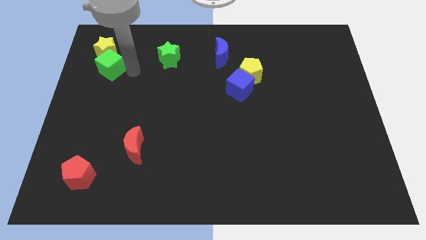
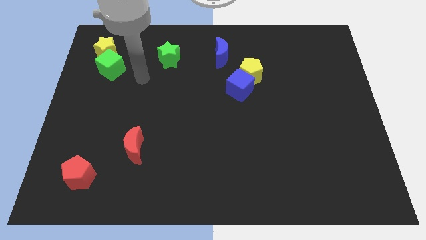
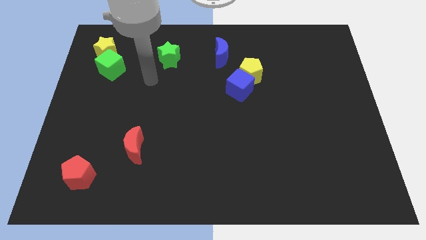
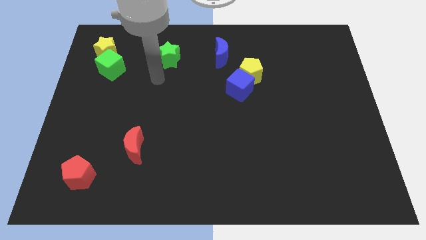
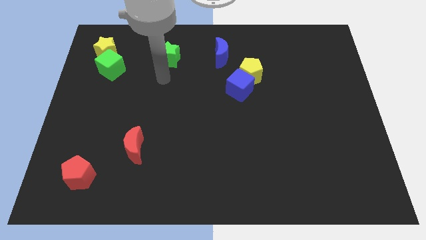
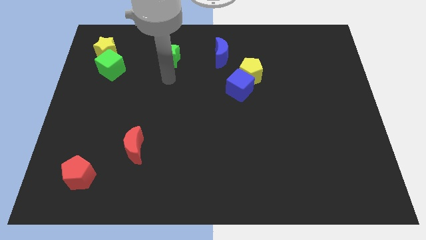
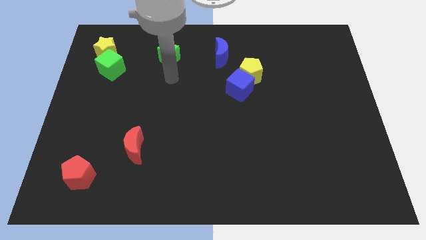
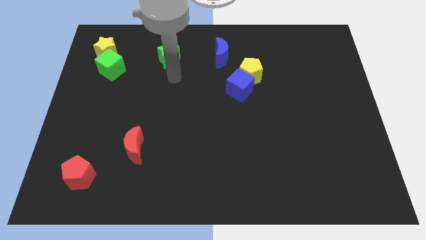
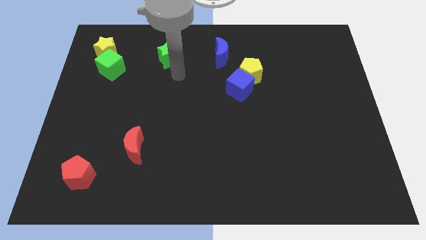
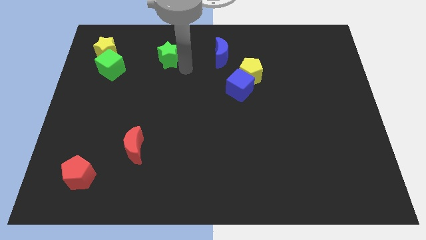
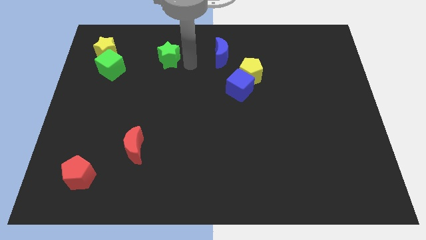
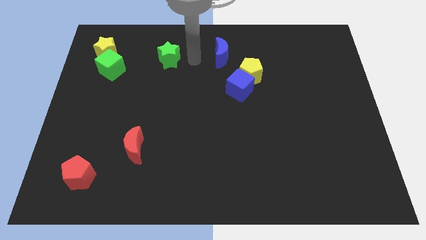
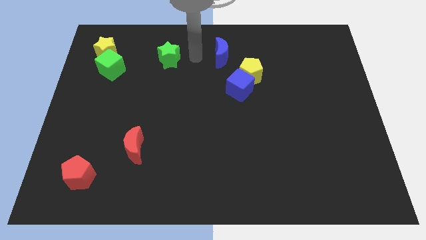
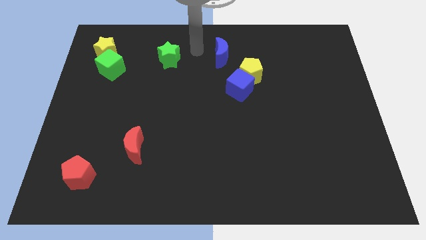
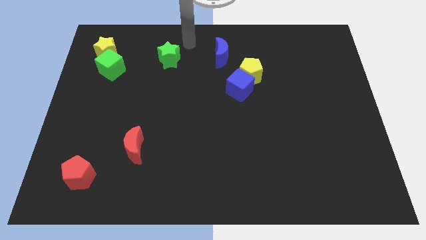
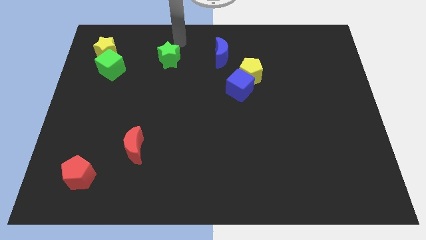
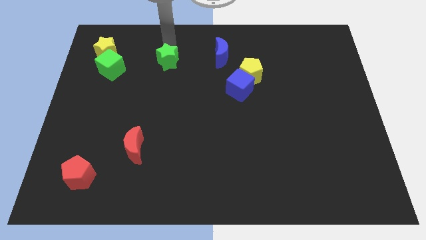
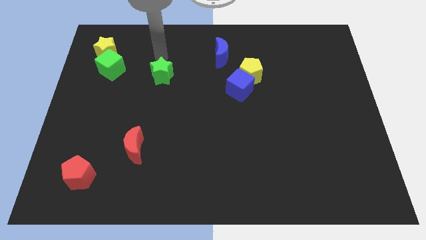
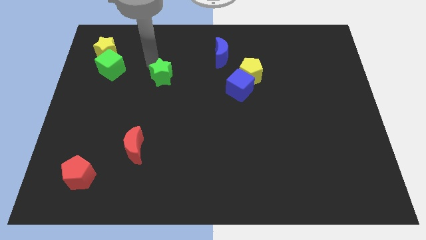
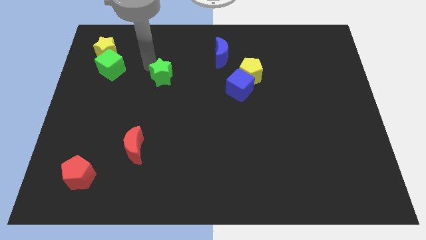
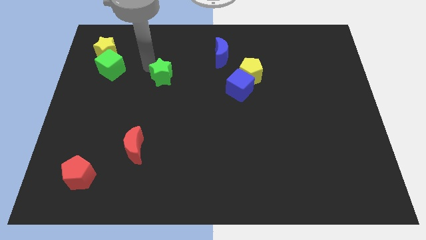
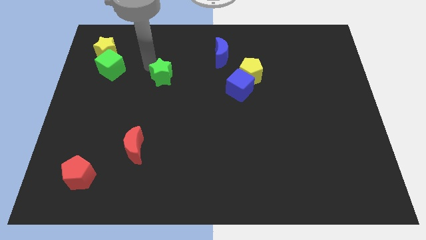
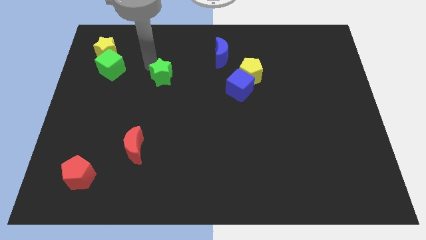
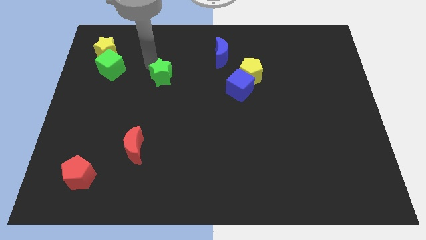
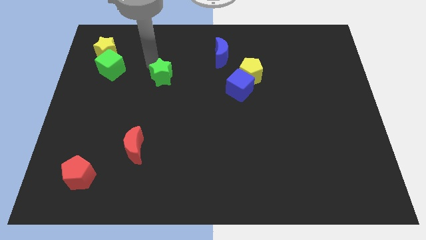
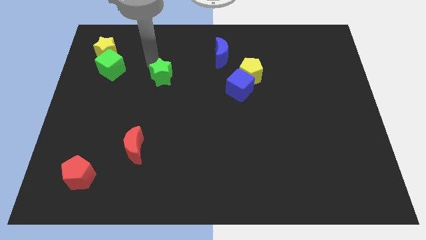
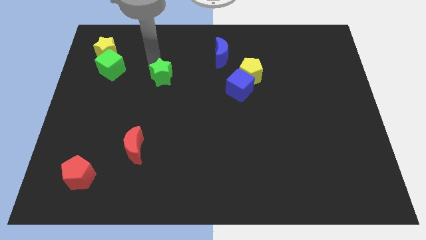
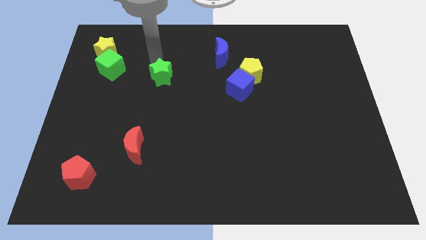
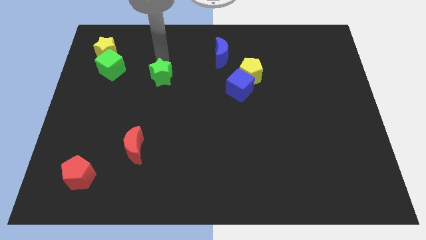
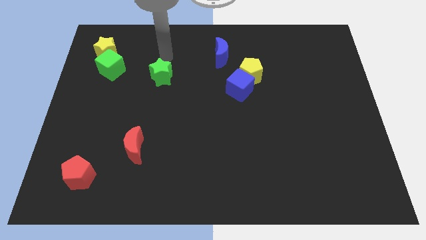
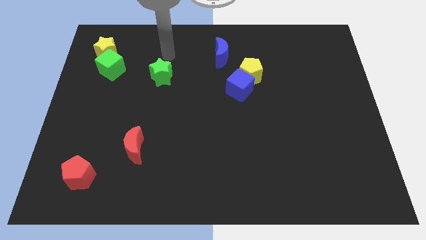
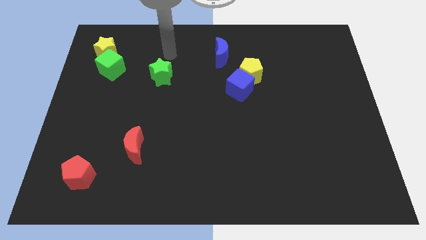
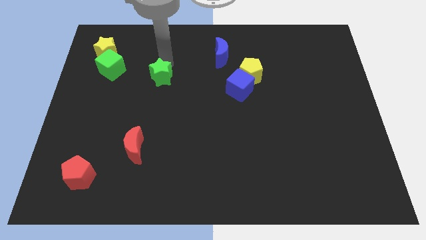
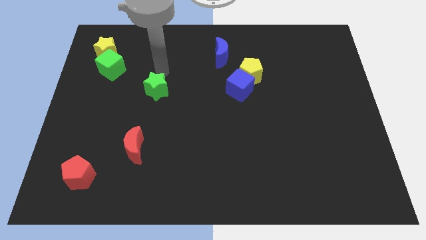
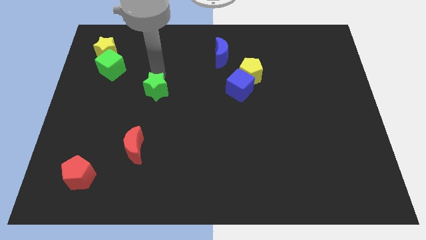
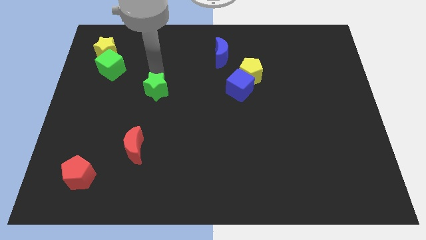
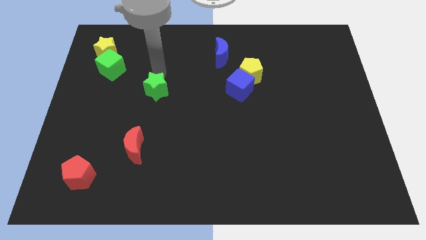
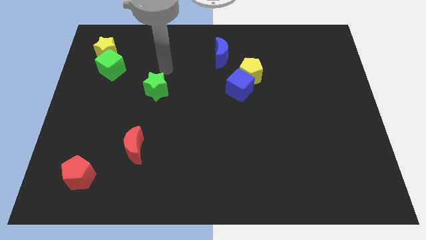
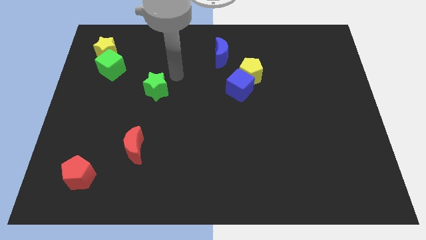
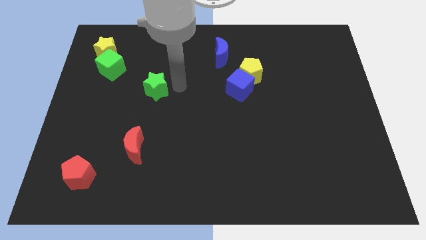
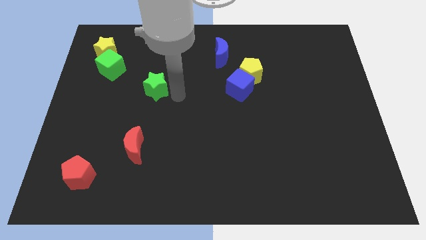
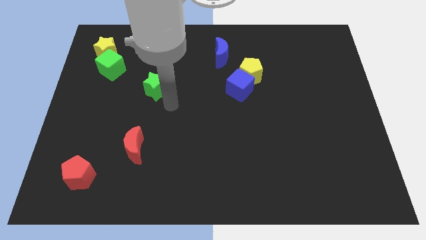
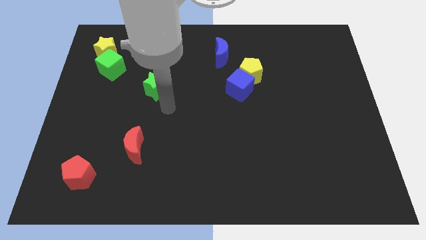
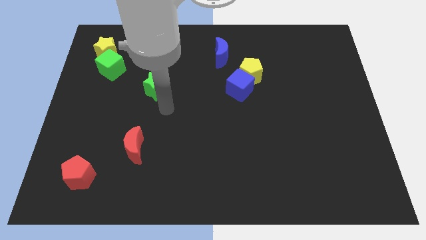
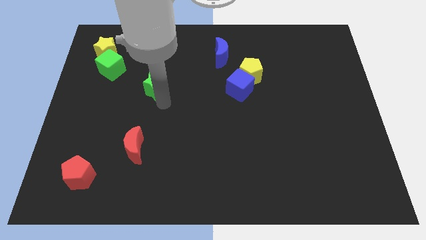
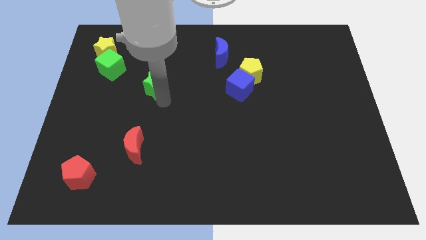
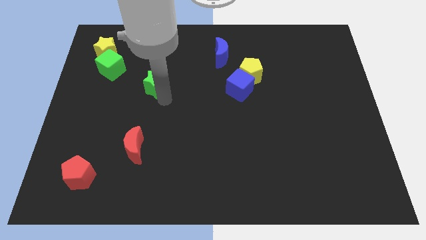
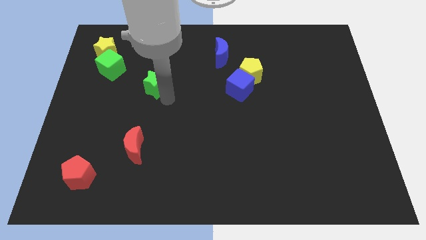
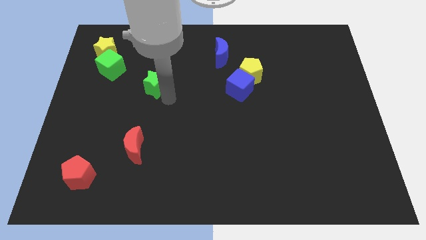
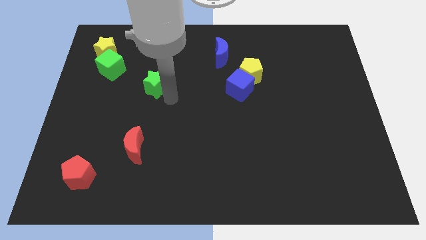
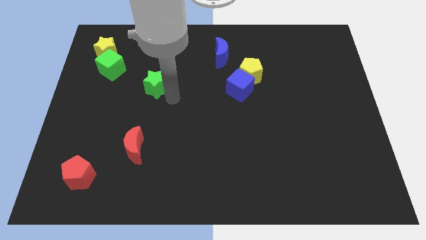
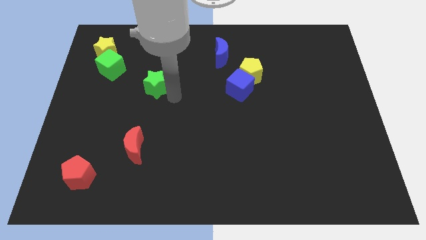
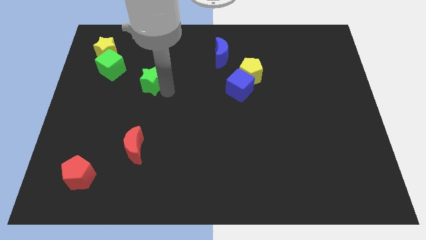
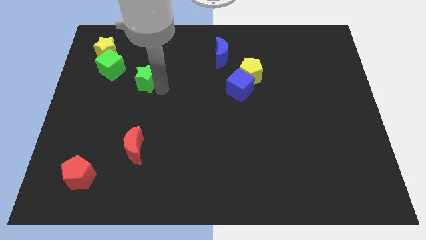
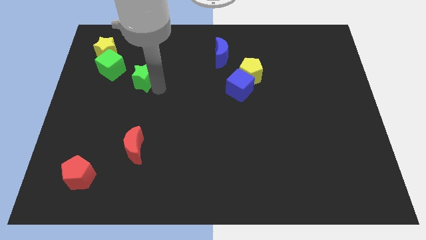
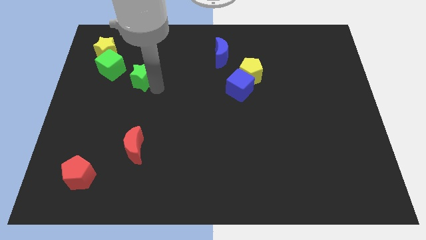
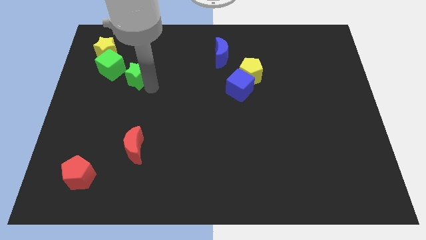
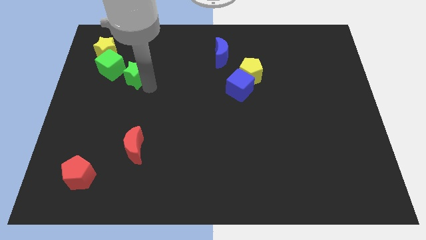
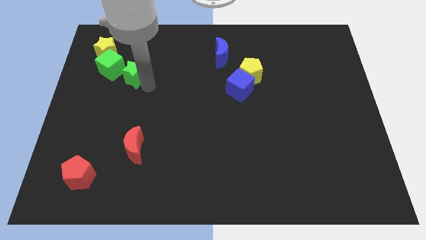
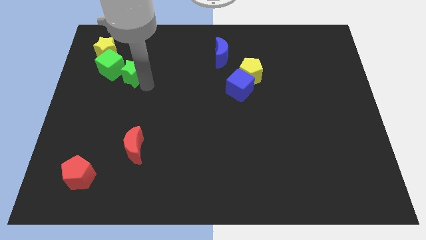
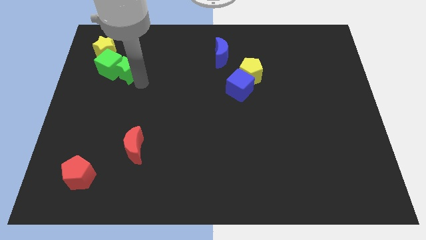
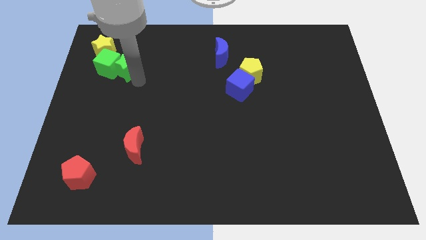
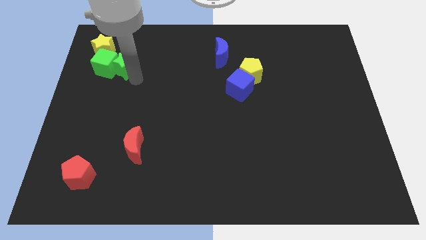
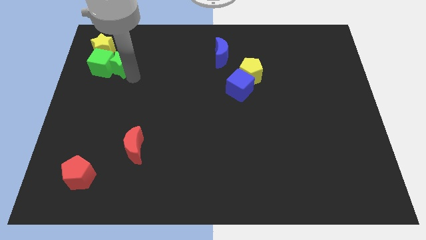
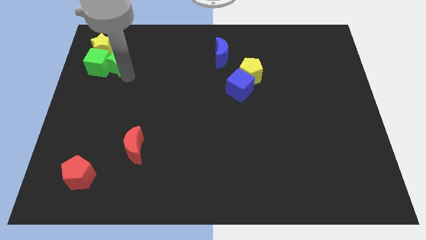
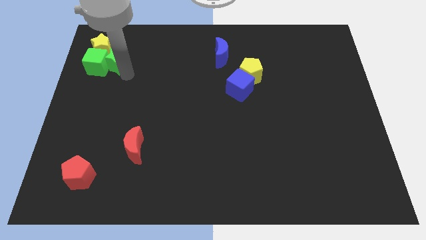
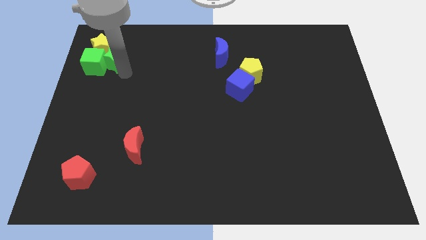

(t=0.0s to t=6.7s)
push the green star into the green cube

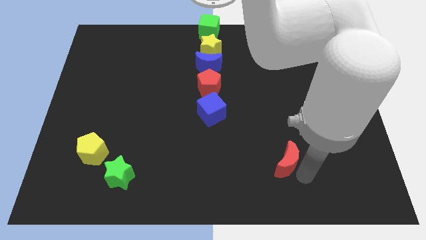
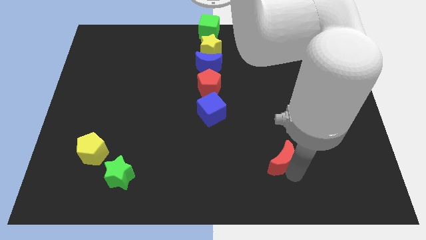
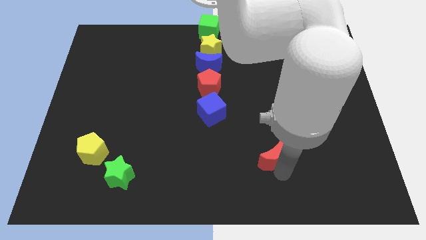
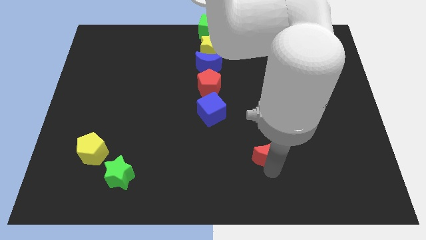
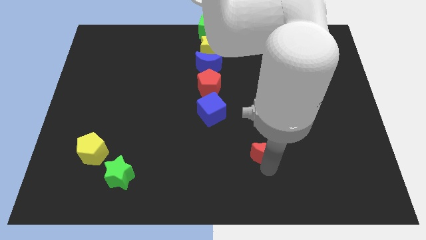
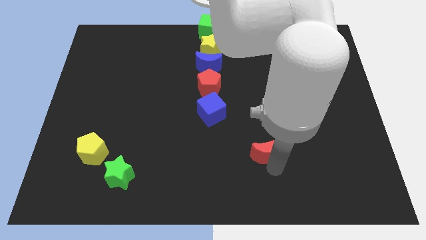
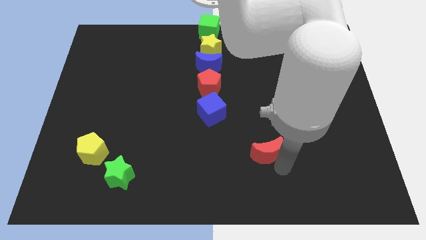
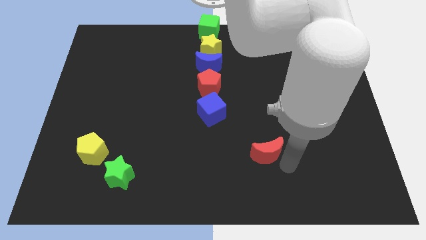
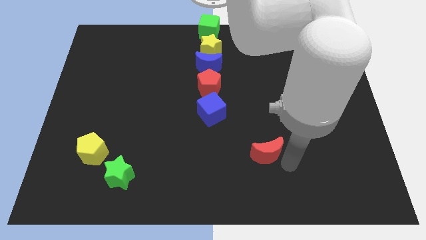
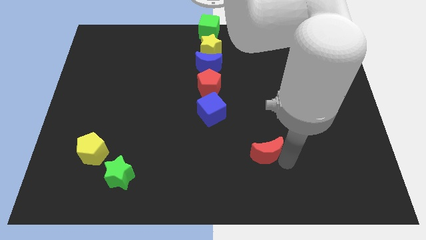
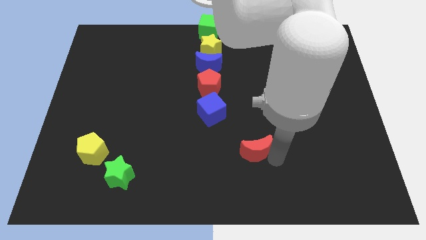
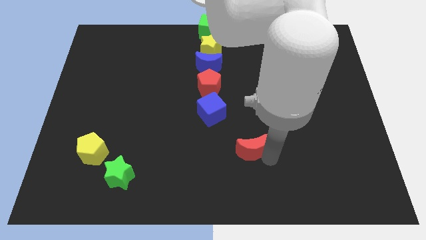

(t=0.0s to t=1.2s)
move the red moon to the bottom center of the board

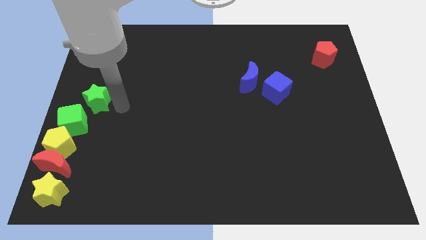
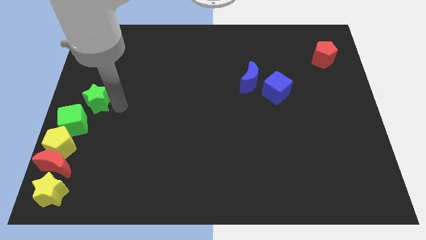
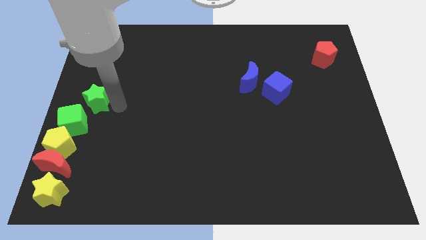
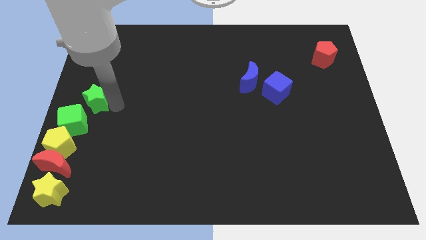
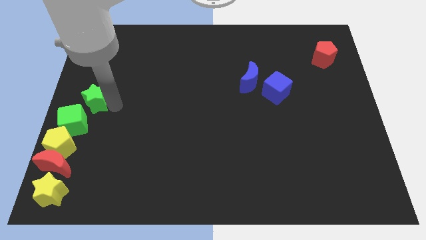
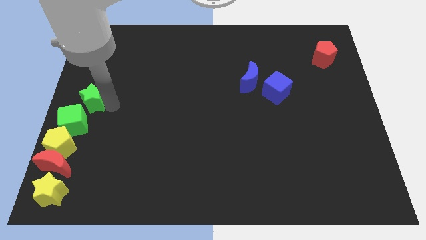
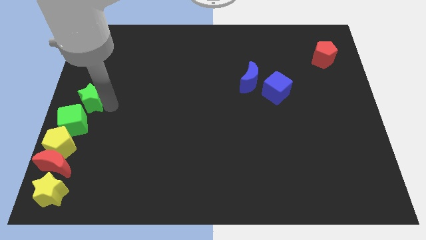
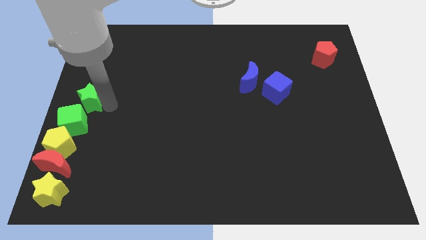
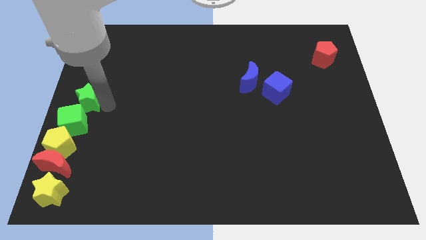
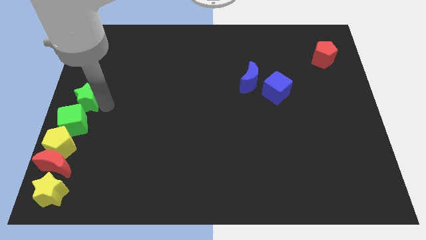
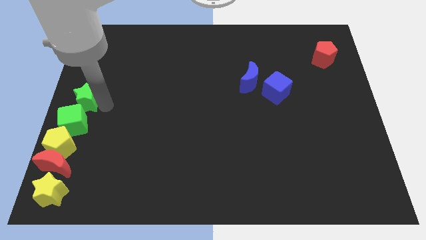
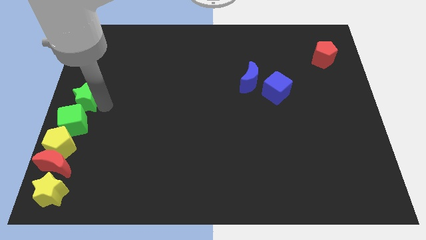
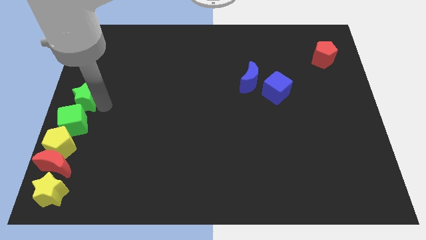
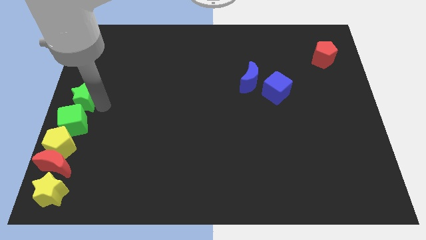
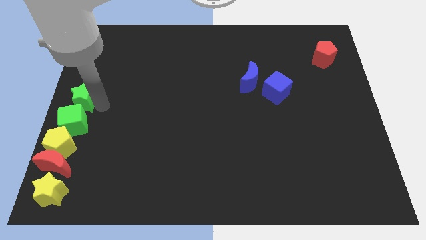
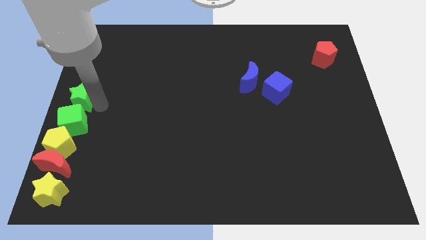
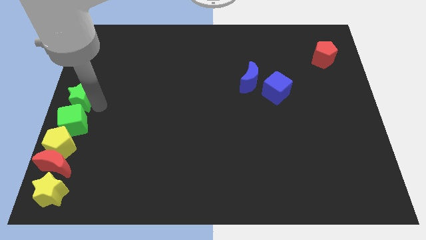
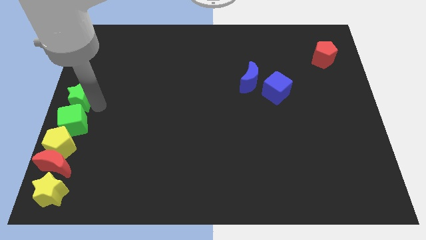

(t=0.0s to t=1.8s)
place green star above green cube
